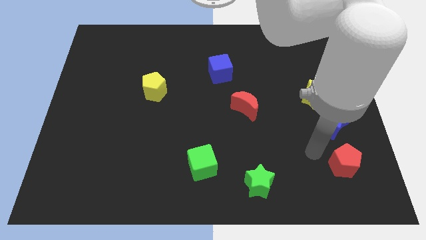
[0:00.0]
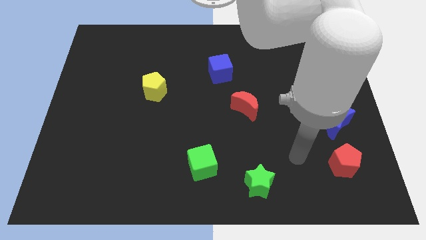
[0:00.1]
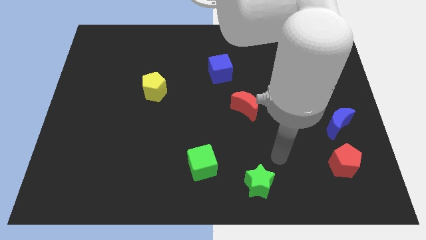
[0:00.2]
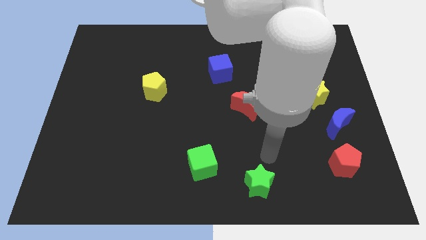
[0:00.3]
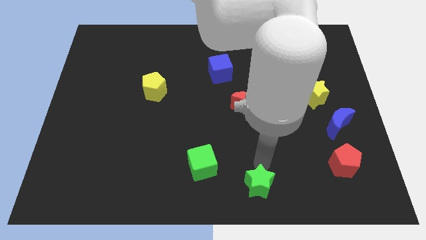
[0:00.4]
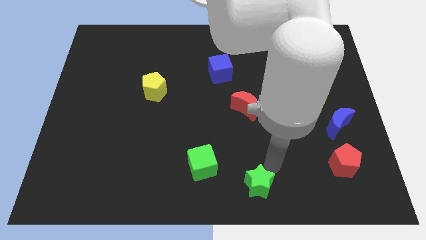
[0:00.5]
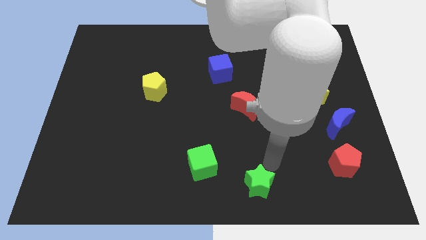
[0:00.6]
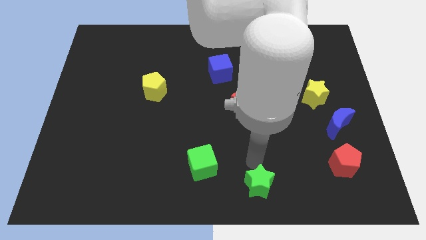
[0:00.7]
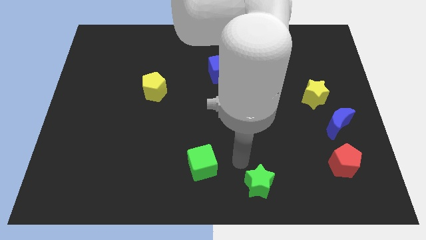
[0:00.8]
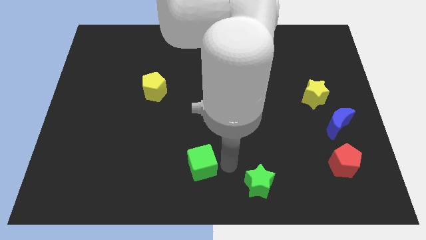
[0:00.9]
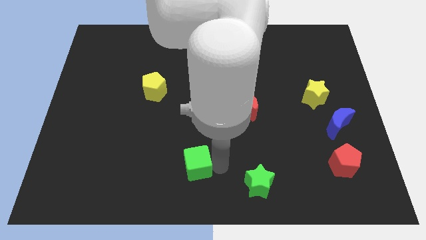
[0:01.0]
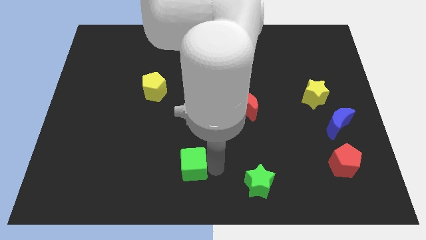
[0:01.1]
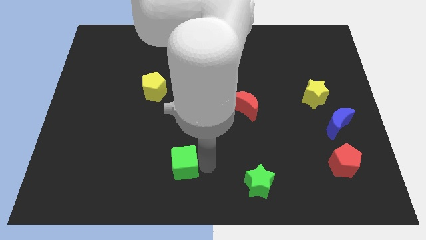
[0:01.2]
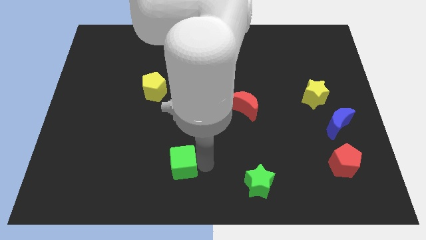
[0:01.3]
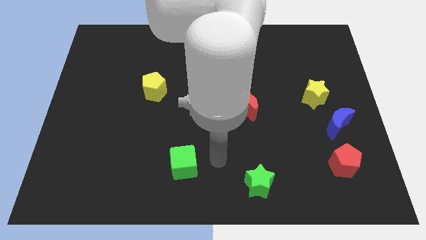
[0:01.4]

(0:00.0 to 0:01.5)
drag the green cube to the left side of the board

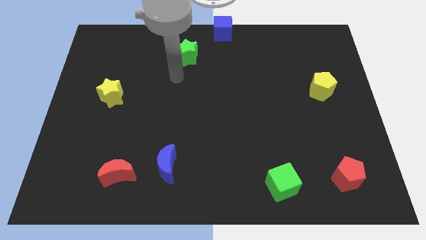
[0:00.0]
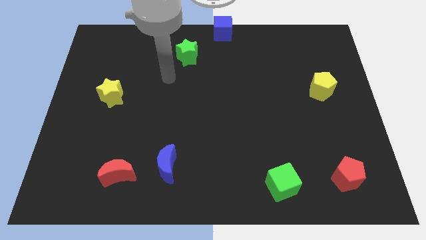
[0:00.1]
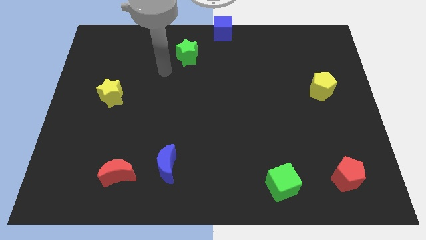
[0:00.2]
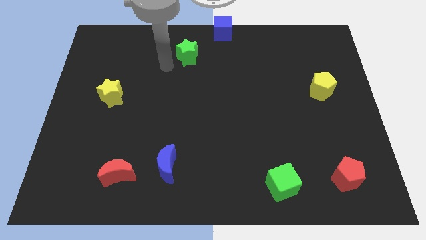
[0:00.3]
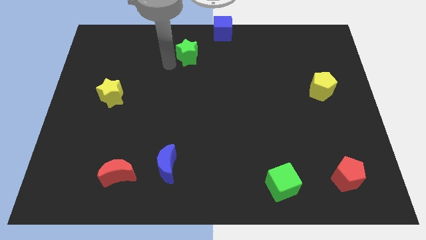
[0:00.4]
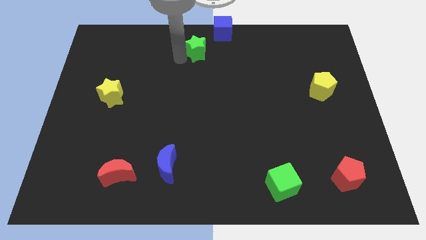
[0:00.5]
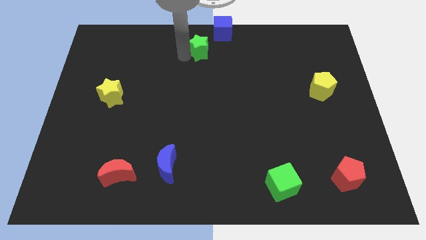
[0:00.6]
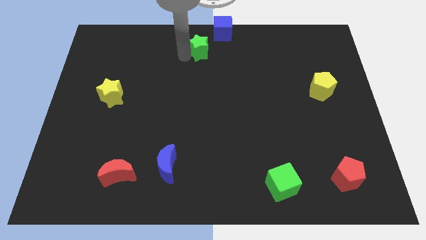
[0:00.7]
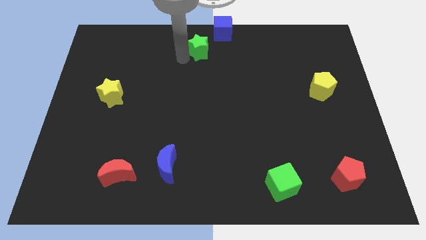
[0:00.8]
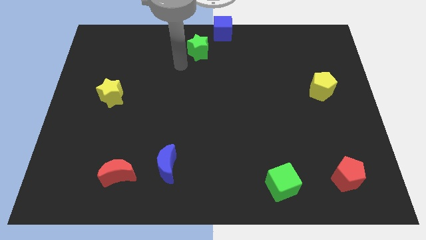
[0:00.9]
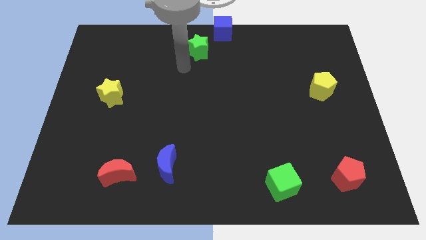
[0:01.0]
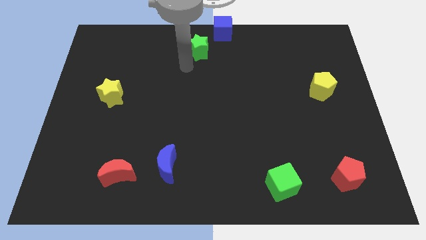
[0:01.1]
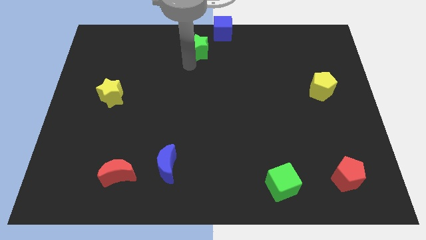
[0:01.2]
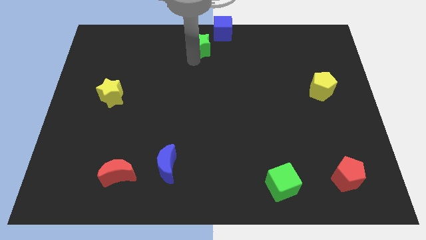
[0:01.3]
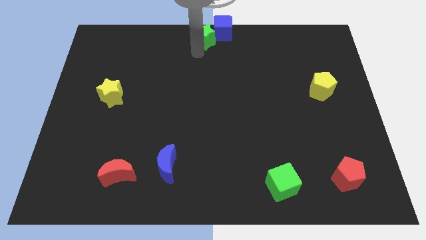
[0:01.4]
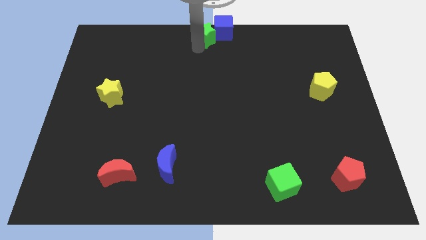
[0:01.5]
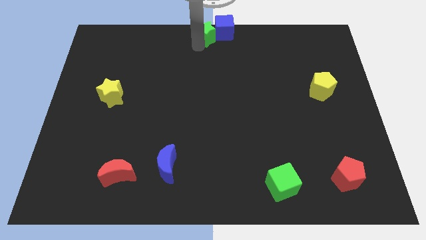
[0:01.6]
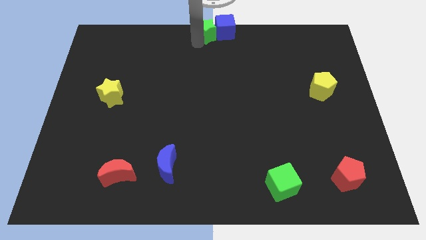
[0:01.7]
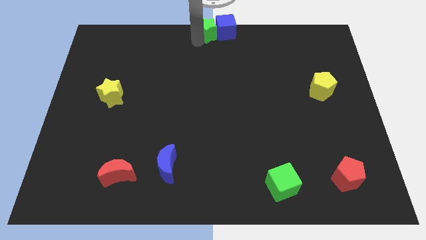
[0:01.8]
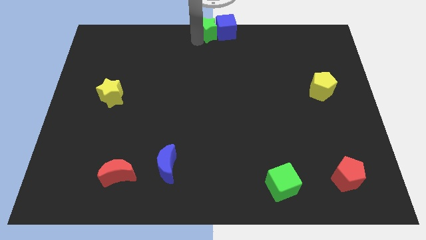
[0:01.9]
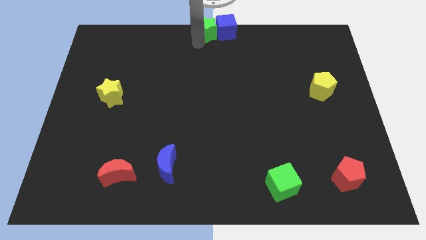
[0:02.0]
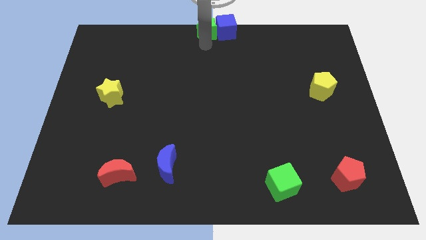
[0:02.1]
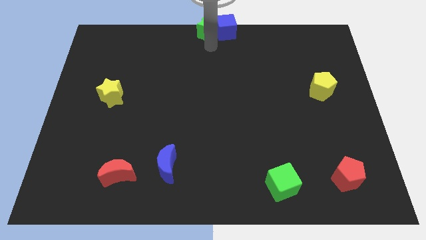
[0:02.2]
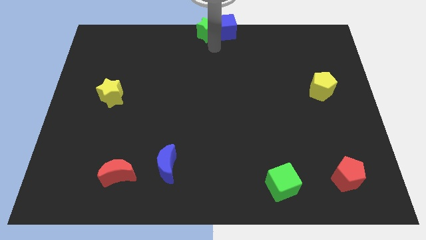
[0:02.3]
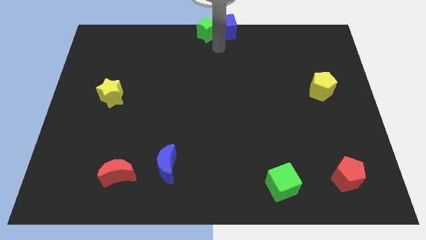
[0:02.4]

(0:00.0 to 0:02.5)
push the green star into blue cube

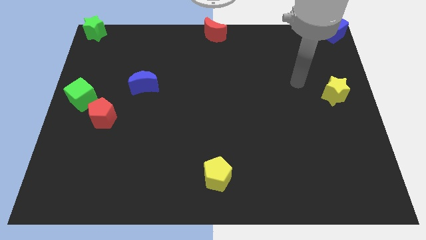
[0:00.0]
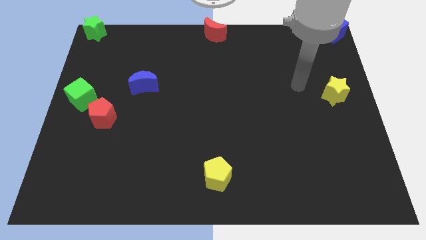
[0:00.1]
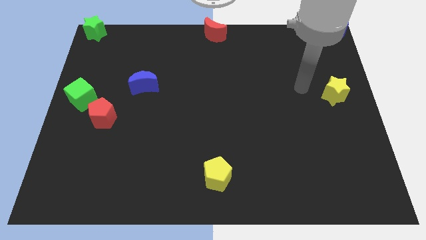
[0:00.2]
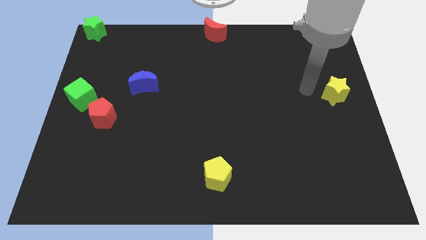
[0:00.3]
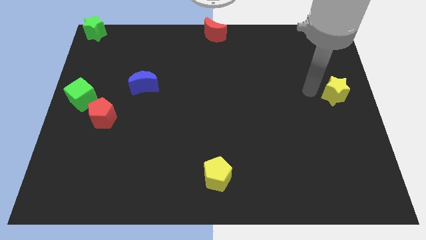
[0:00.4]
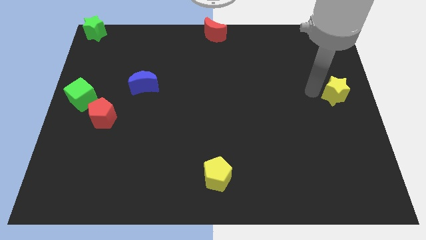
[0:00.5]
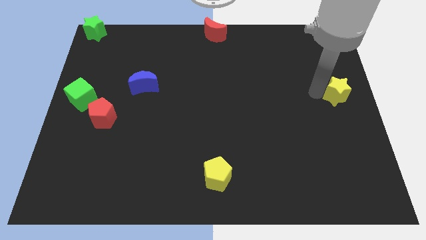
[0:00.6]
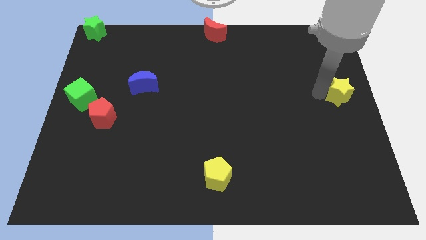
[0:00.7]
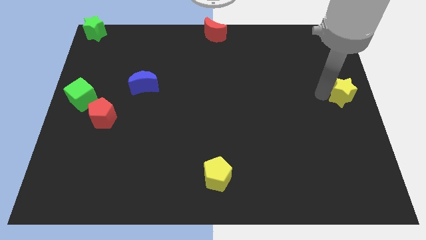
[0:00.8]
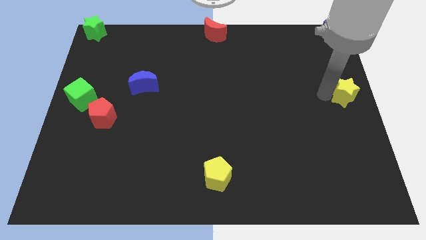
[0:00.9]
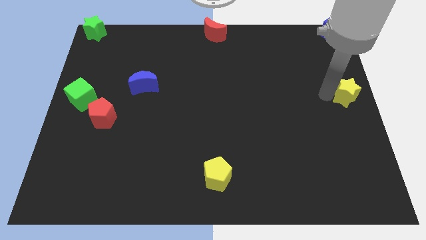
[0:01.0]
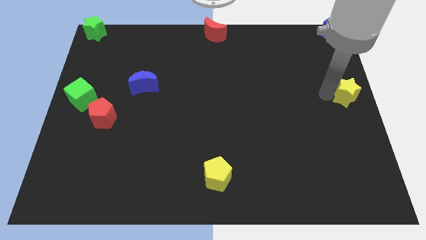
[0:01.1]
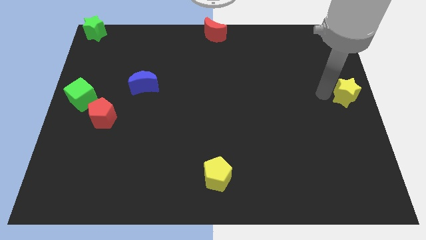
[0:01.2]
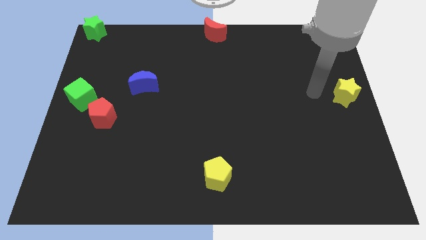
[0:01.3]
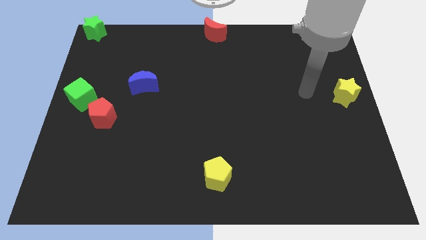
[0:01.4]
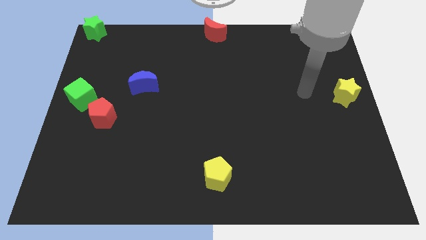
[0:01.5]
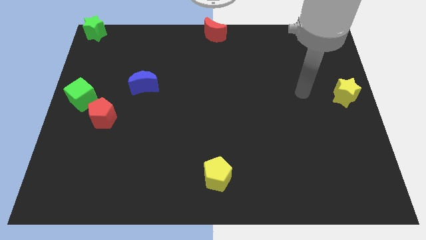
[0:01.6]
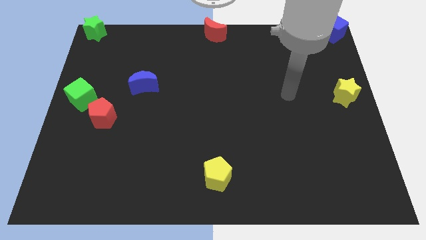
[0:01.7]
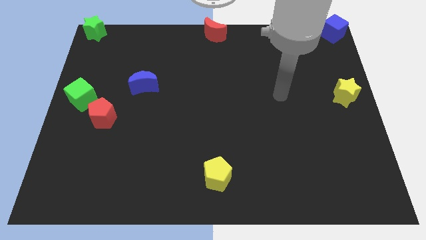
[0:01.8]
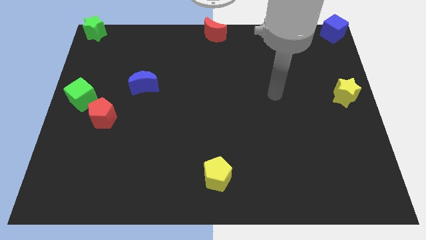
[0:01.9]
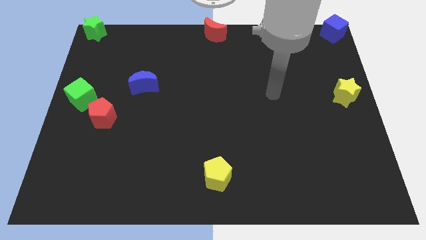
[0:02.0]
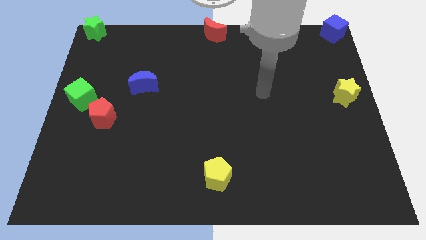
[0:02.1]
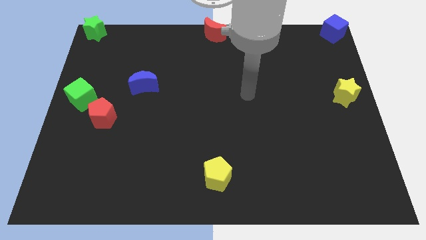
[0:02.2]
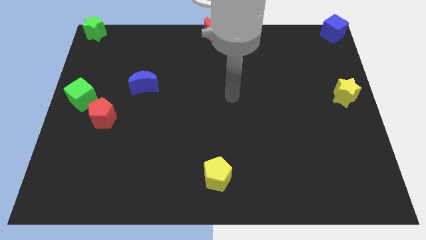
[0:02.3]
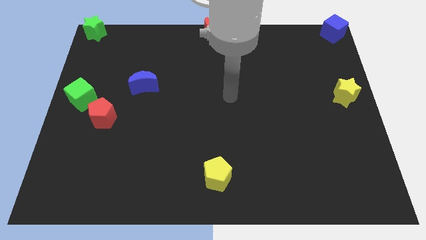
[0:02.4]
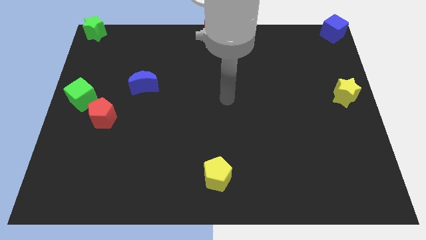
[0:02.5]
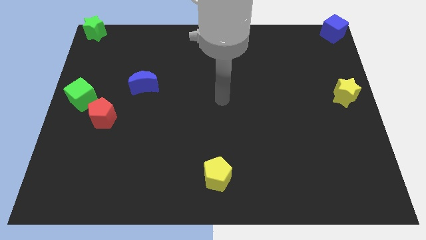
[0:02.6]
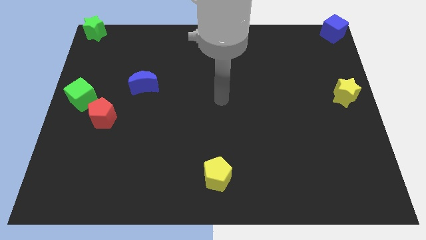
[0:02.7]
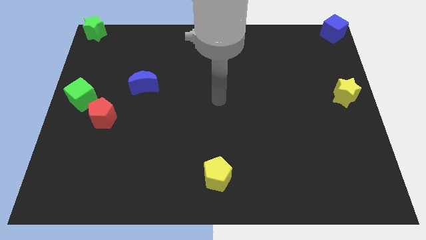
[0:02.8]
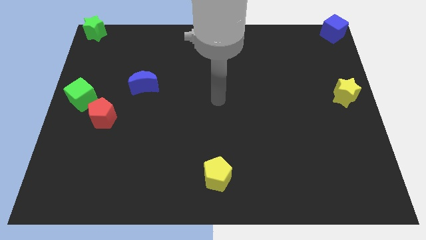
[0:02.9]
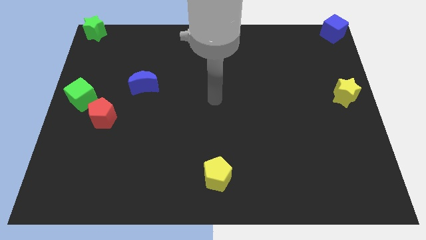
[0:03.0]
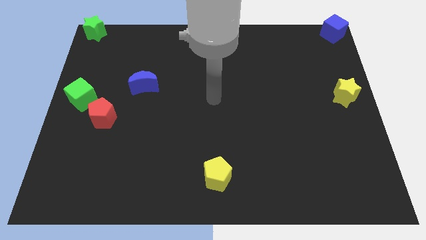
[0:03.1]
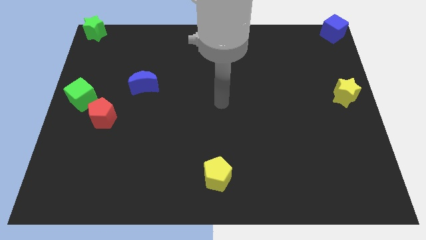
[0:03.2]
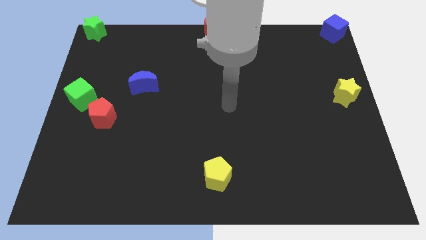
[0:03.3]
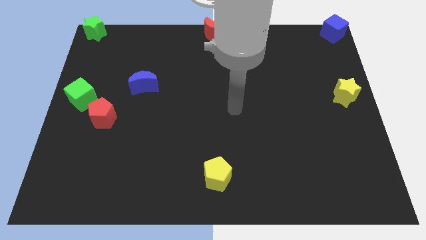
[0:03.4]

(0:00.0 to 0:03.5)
put the yellow star vertically at the bottom side of the blue cube

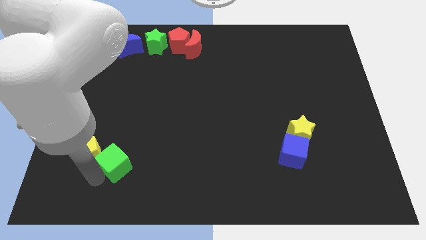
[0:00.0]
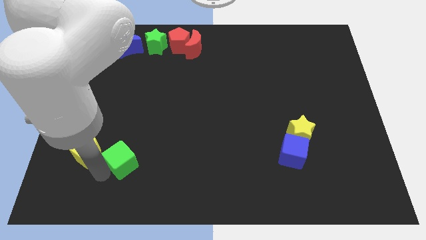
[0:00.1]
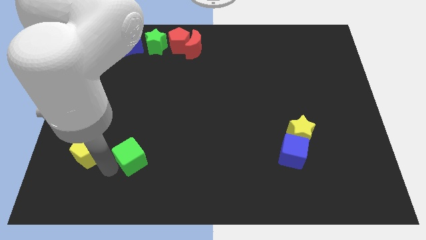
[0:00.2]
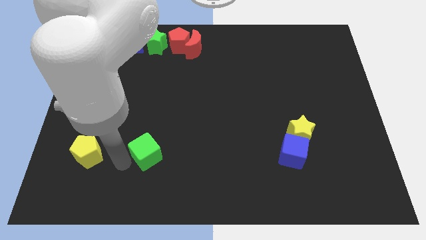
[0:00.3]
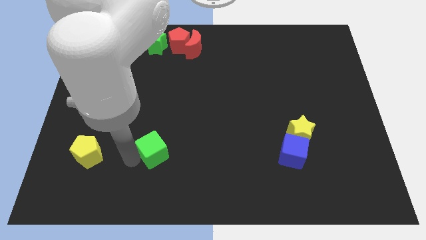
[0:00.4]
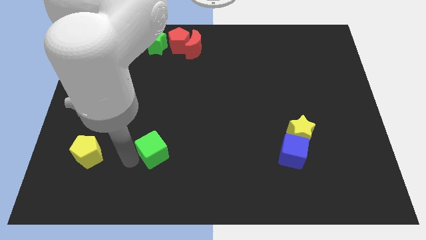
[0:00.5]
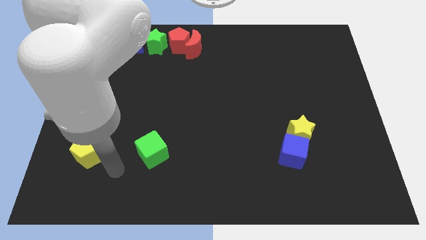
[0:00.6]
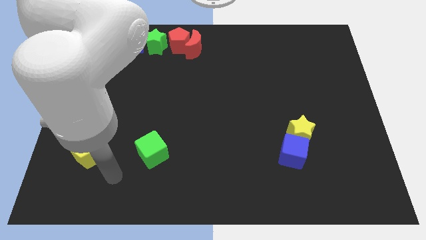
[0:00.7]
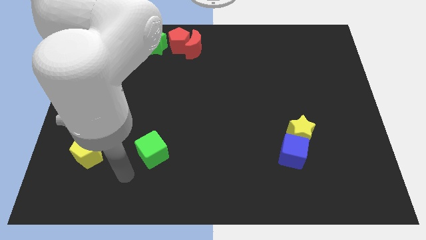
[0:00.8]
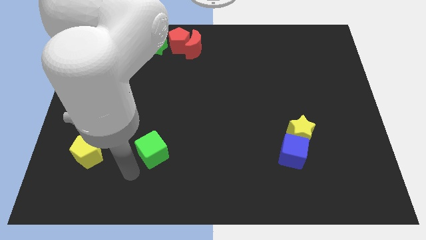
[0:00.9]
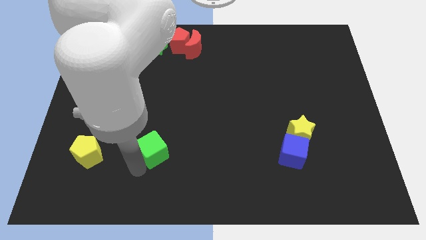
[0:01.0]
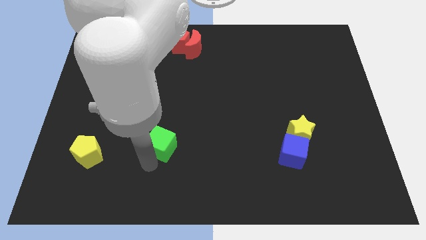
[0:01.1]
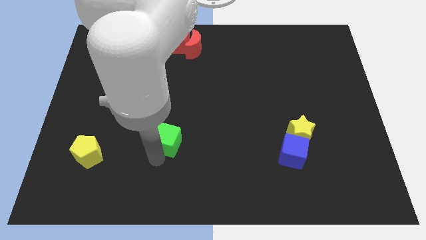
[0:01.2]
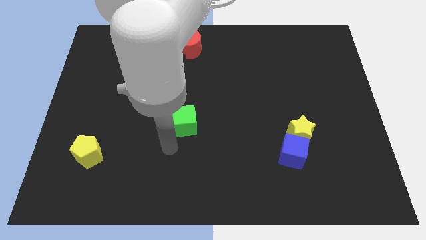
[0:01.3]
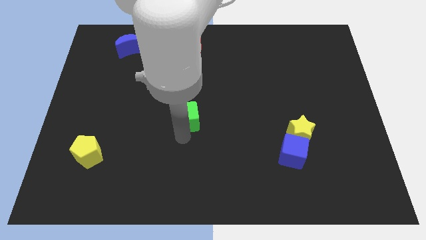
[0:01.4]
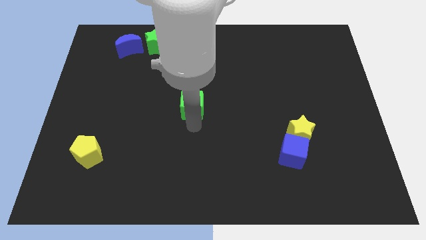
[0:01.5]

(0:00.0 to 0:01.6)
push the green cube to the right
